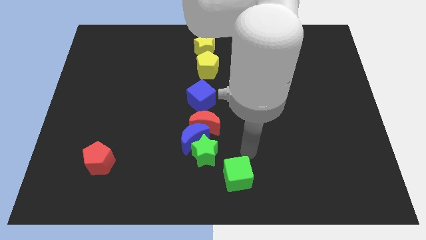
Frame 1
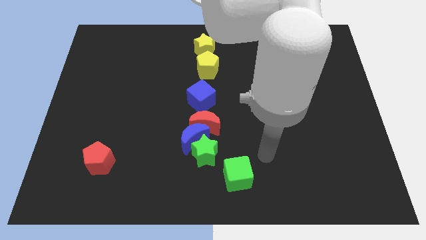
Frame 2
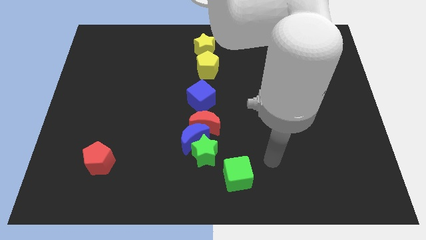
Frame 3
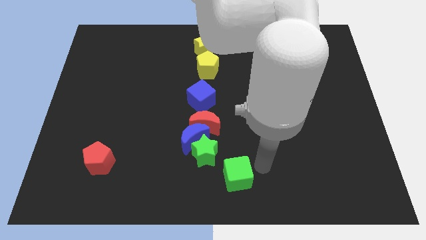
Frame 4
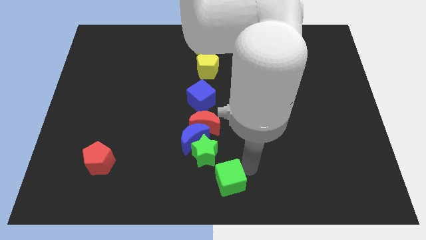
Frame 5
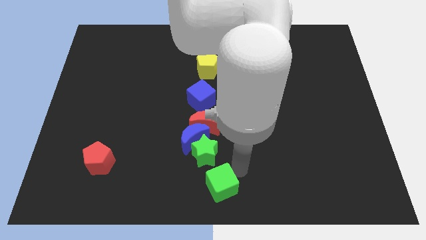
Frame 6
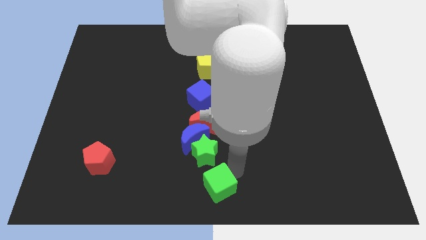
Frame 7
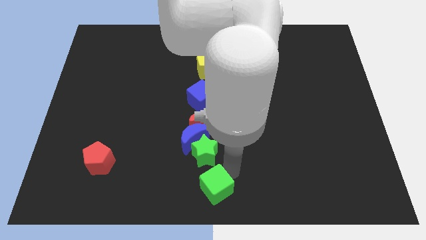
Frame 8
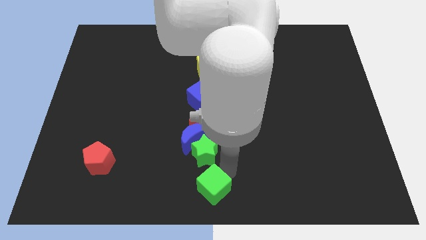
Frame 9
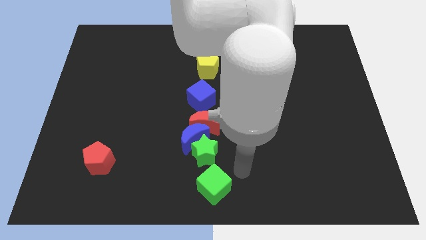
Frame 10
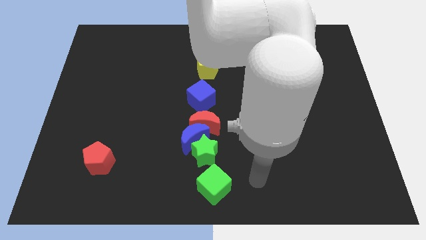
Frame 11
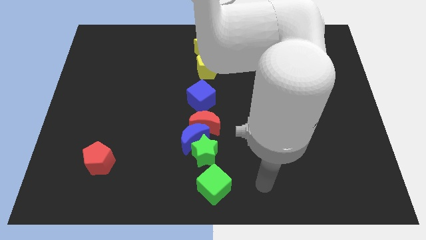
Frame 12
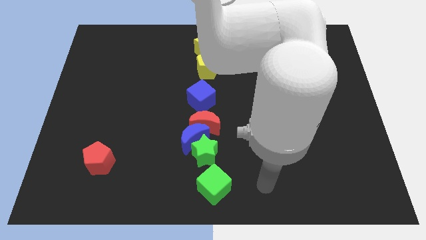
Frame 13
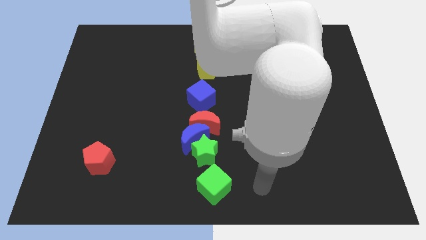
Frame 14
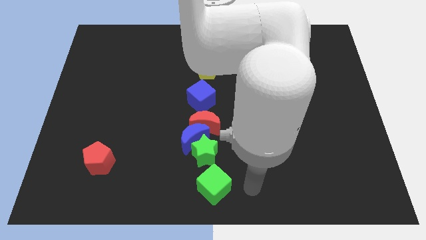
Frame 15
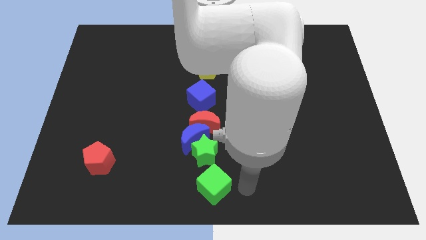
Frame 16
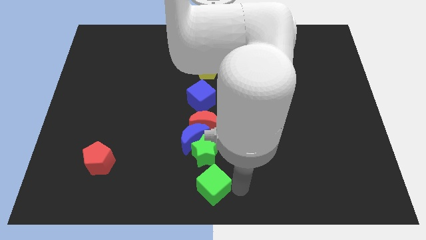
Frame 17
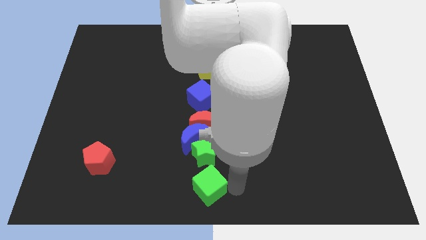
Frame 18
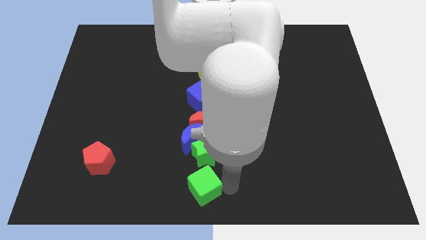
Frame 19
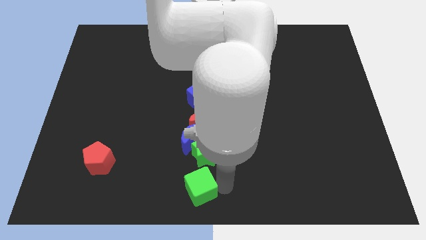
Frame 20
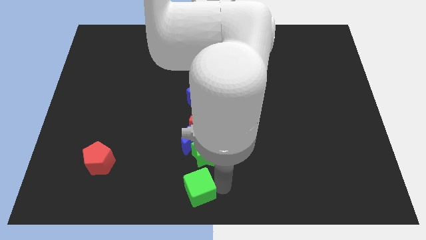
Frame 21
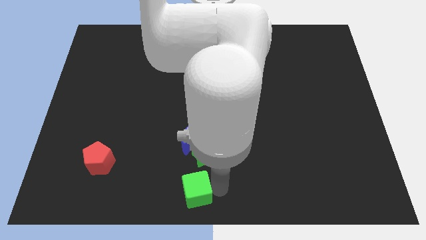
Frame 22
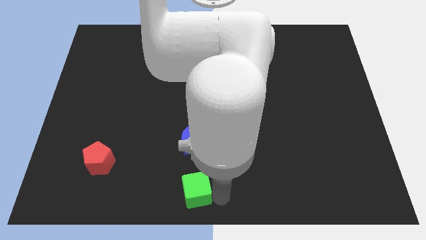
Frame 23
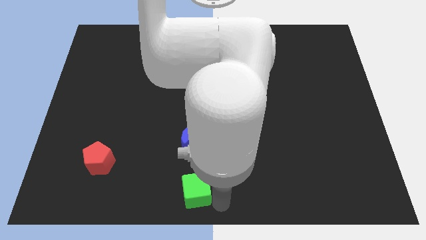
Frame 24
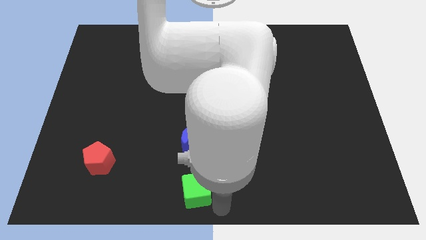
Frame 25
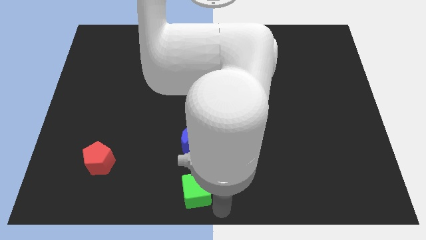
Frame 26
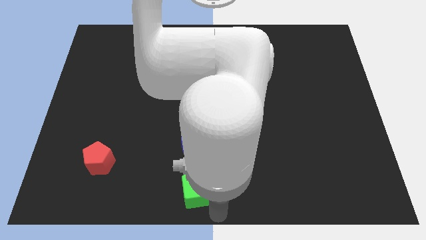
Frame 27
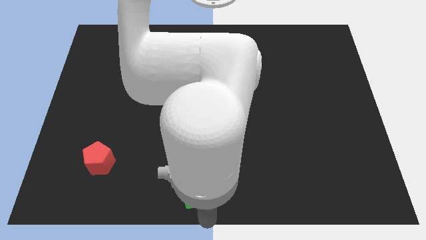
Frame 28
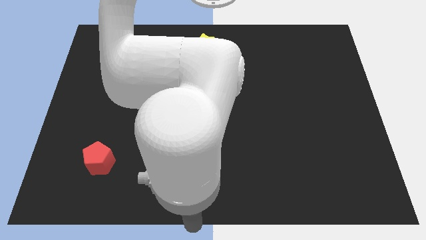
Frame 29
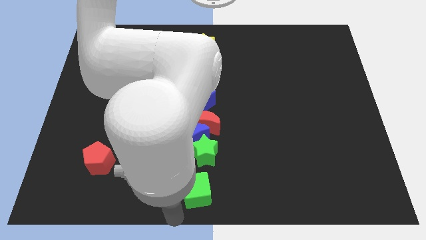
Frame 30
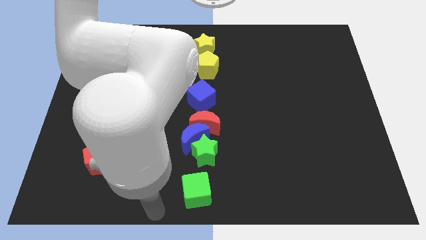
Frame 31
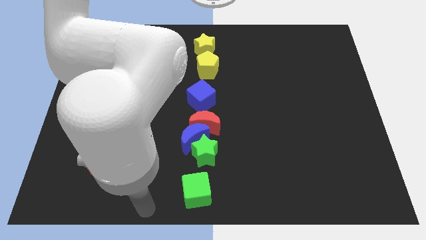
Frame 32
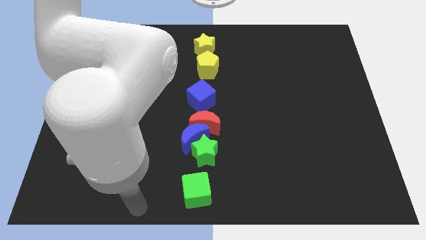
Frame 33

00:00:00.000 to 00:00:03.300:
place the green cube at the bottom center of the board

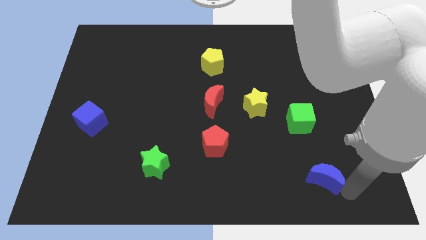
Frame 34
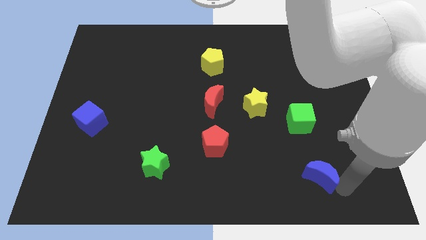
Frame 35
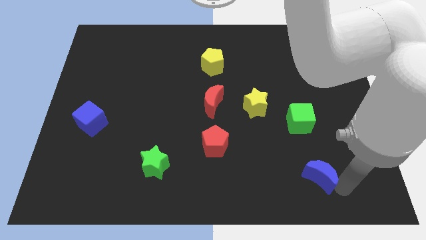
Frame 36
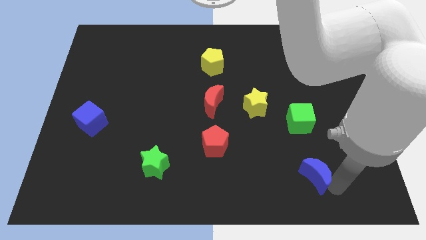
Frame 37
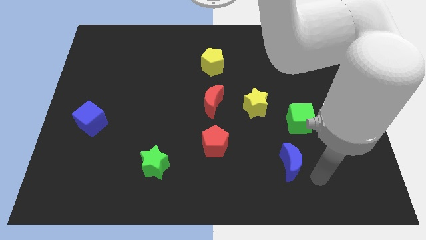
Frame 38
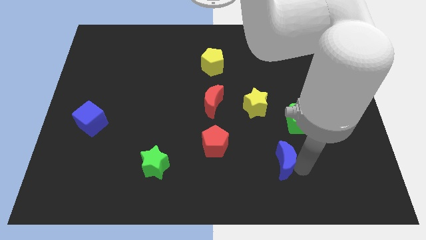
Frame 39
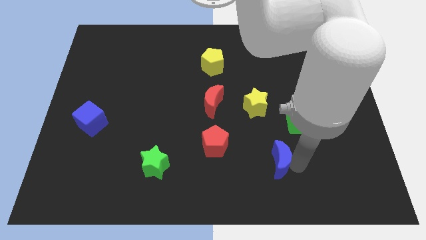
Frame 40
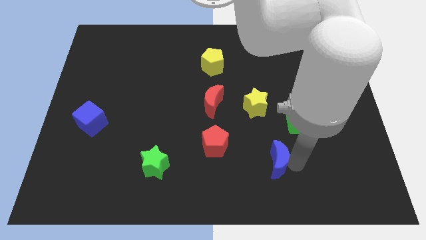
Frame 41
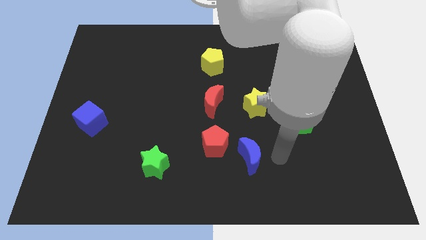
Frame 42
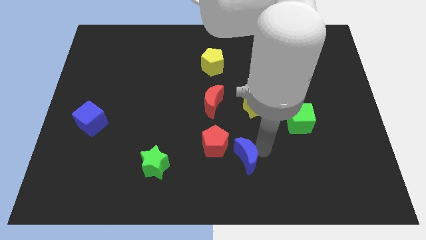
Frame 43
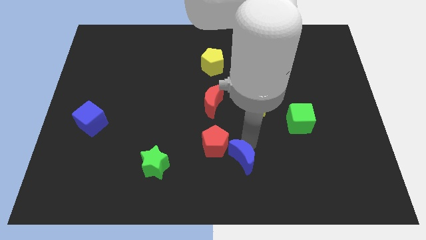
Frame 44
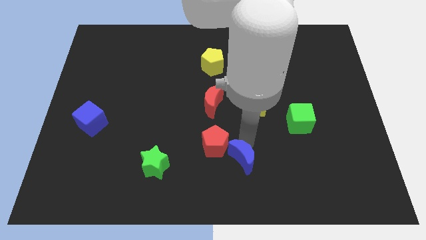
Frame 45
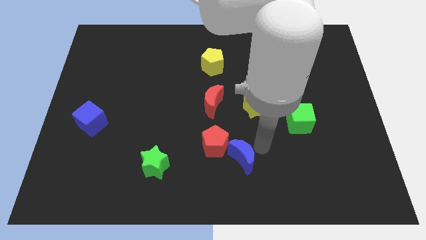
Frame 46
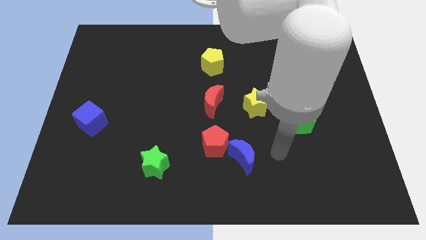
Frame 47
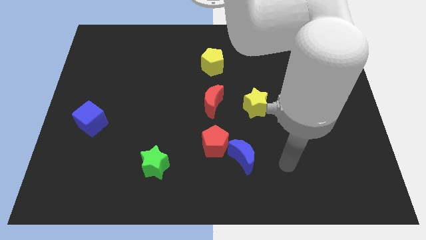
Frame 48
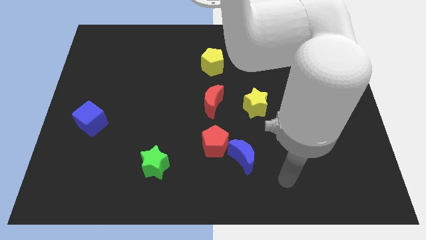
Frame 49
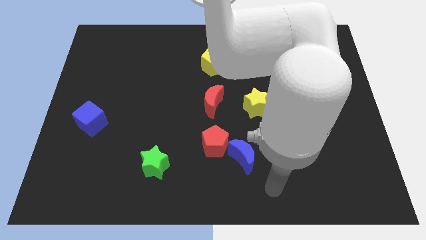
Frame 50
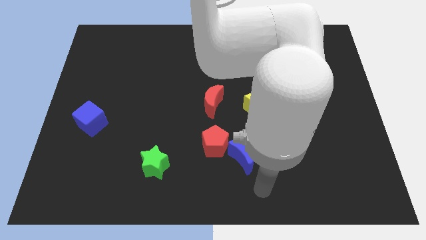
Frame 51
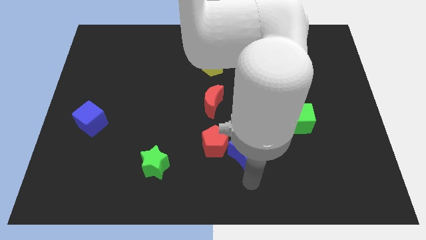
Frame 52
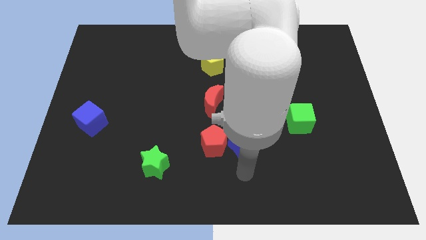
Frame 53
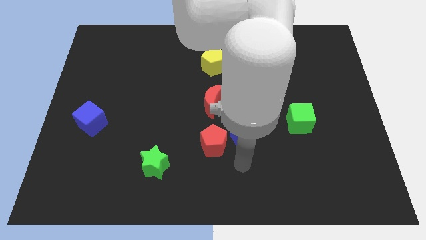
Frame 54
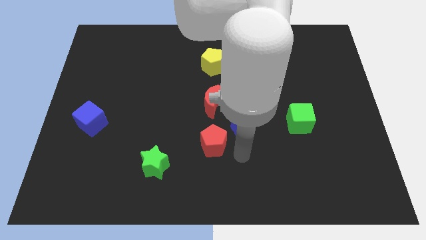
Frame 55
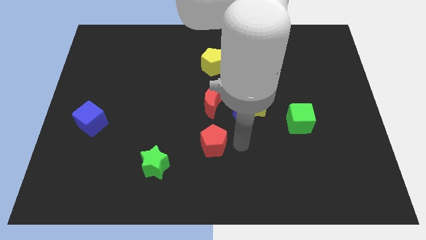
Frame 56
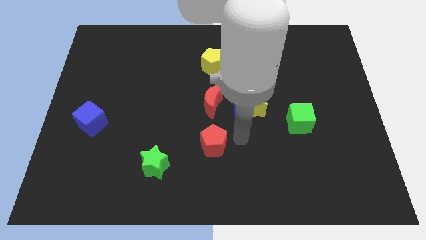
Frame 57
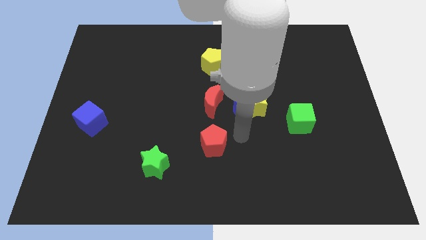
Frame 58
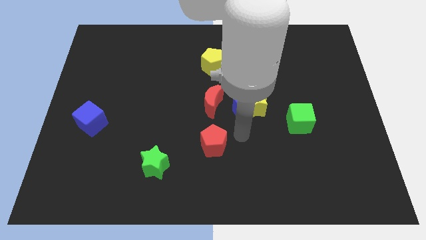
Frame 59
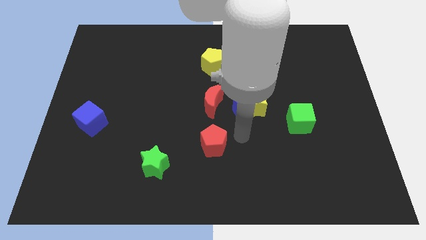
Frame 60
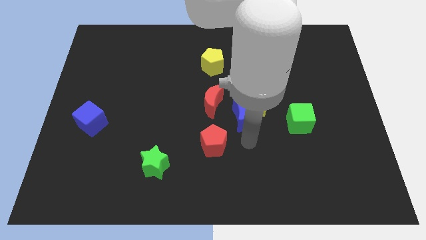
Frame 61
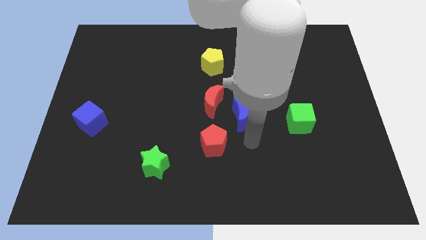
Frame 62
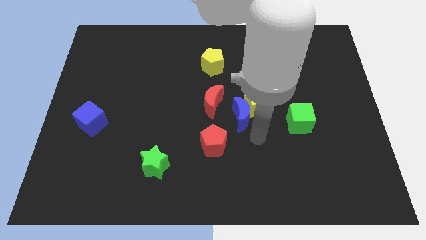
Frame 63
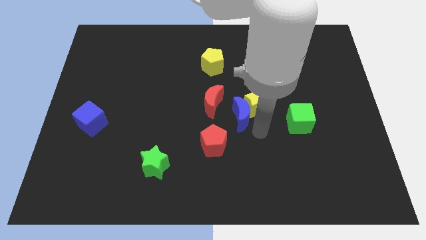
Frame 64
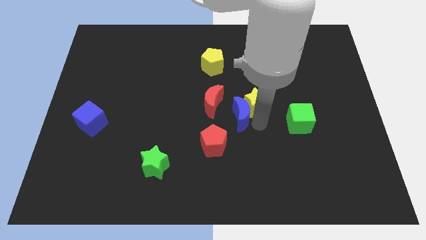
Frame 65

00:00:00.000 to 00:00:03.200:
move the blue moon into the yellow star

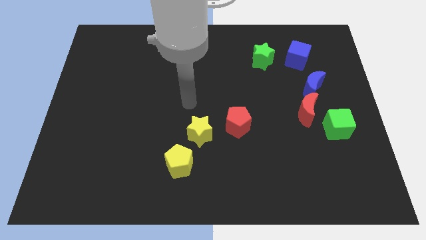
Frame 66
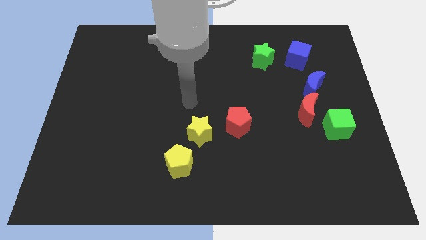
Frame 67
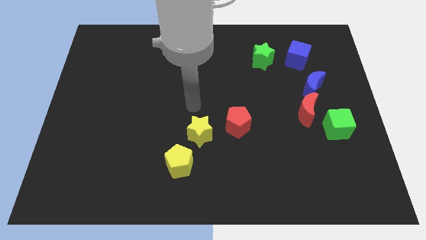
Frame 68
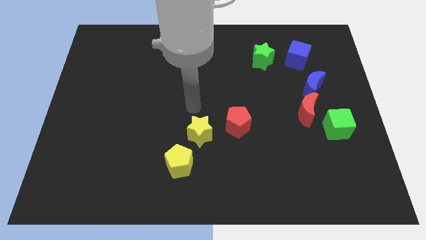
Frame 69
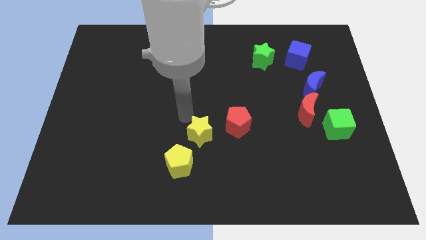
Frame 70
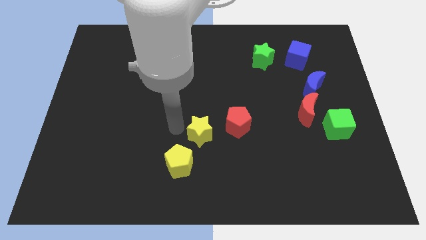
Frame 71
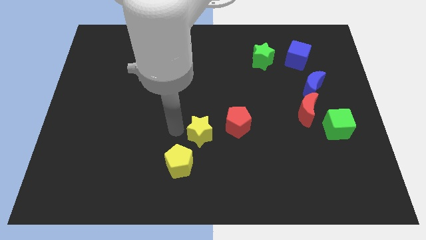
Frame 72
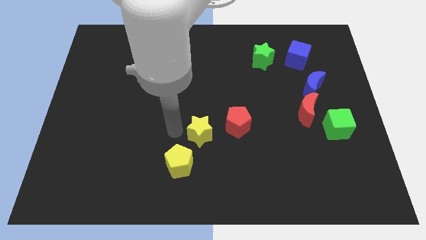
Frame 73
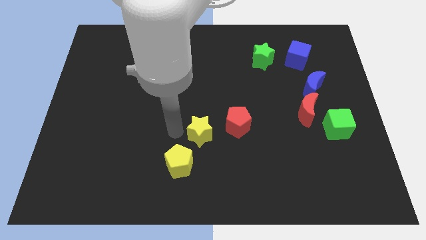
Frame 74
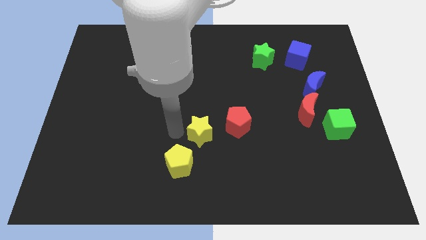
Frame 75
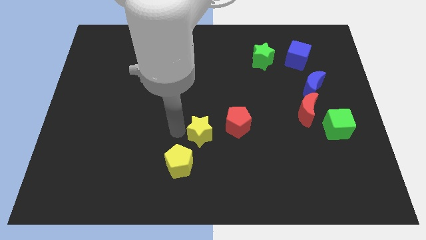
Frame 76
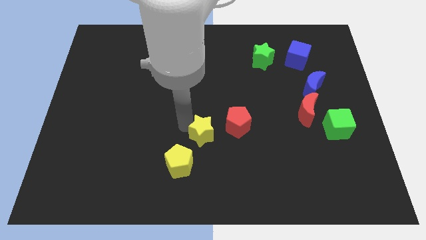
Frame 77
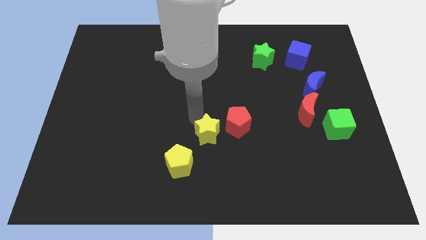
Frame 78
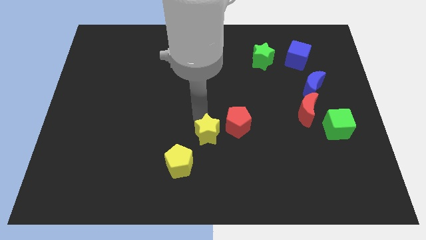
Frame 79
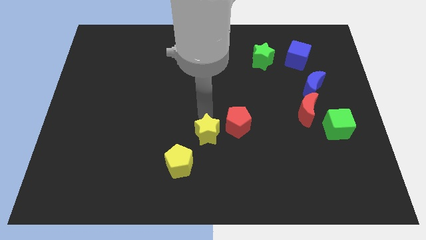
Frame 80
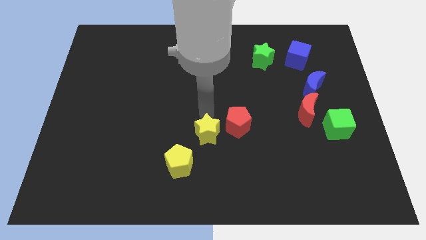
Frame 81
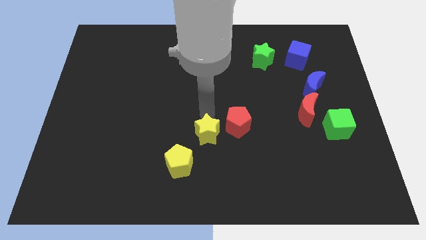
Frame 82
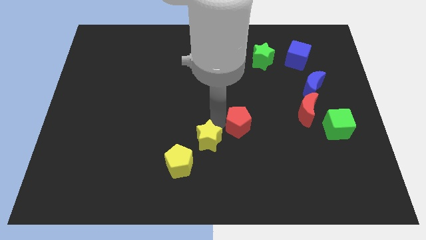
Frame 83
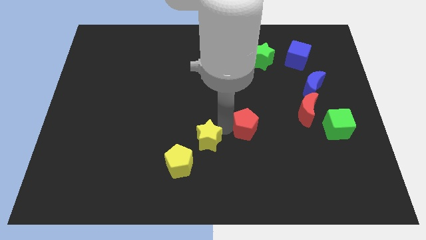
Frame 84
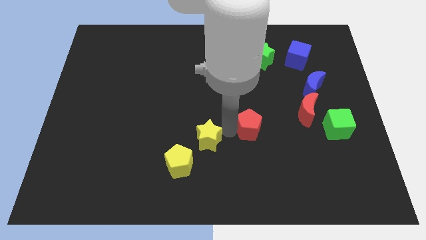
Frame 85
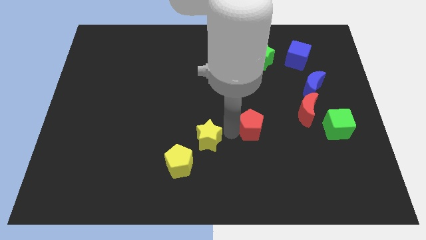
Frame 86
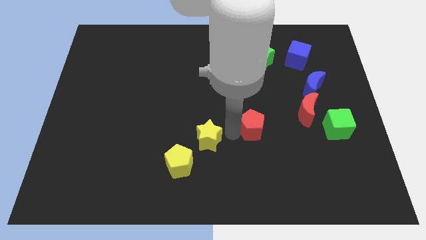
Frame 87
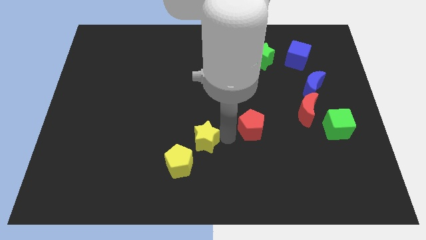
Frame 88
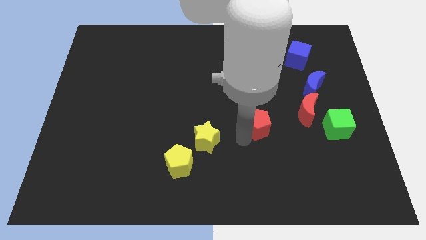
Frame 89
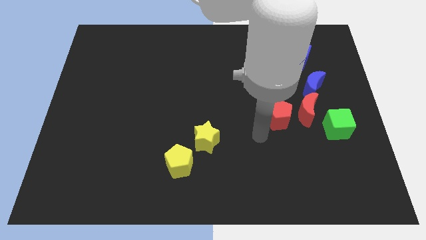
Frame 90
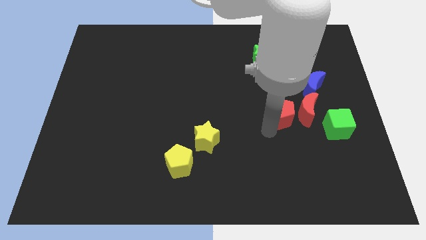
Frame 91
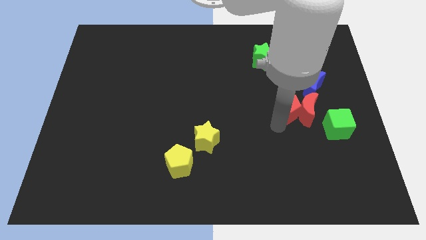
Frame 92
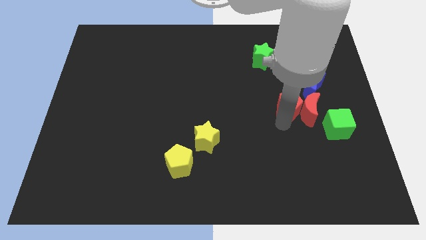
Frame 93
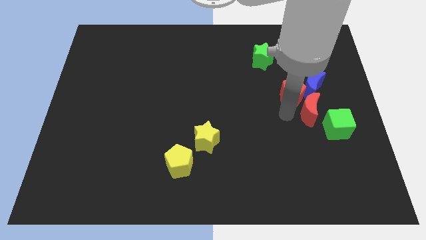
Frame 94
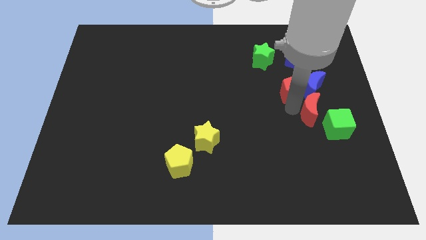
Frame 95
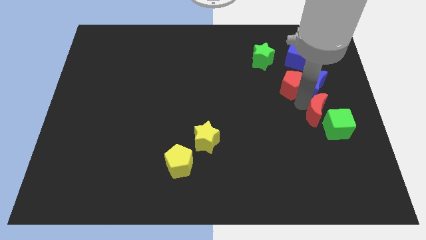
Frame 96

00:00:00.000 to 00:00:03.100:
move the red pentagon to the left of the blue moon
